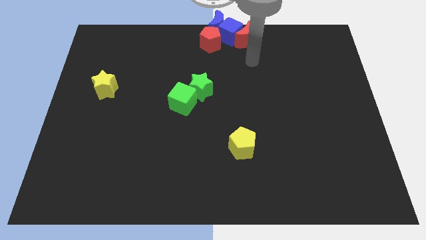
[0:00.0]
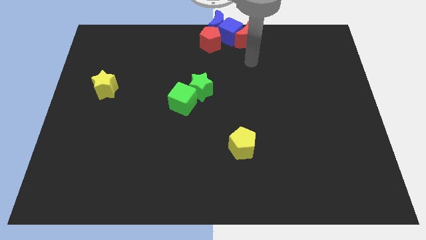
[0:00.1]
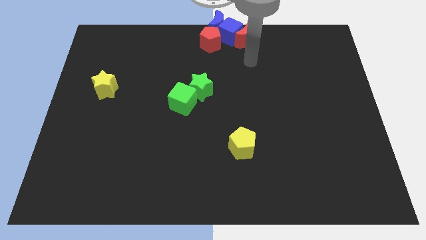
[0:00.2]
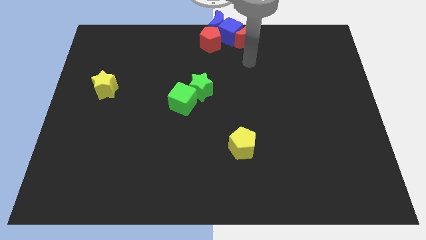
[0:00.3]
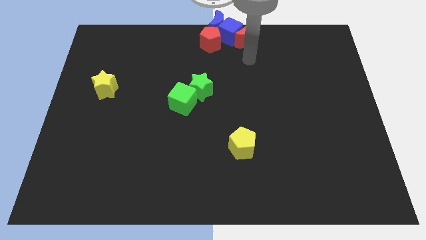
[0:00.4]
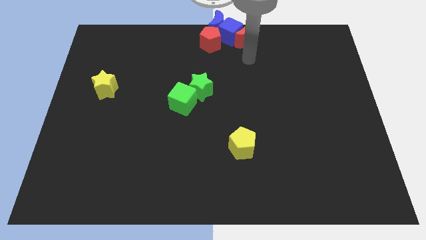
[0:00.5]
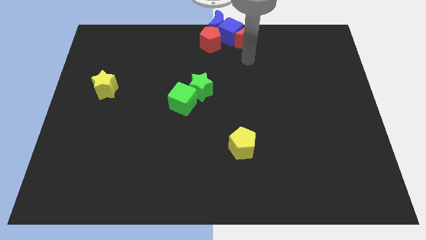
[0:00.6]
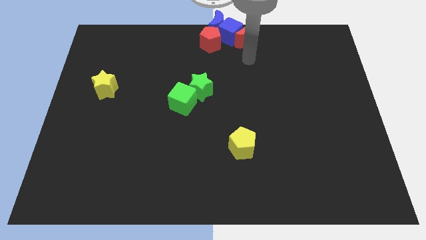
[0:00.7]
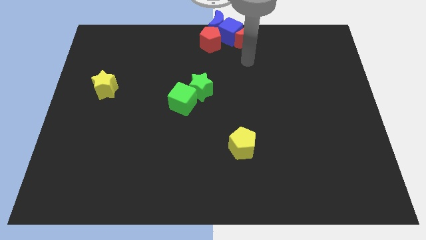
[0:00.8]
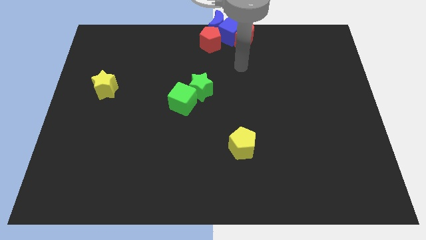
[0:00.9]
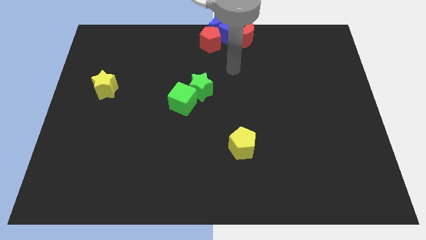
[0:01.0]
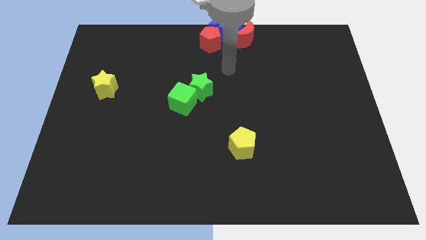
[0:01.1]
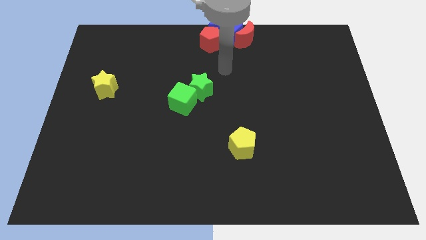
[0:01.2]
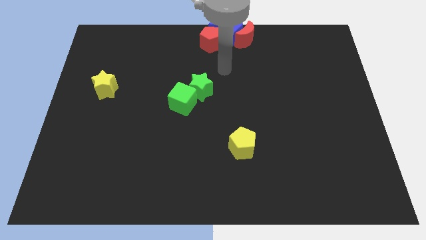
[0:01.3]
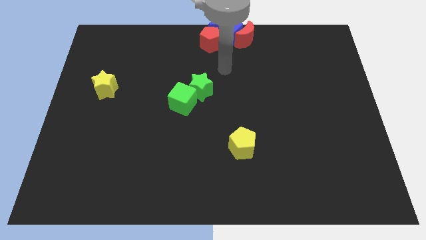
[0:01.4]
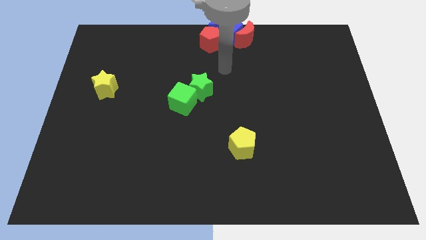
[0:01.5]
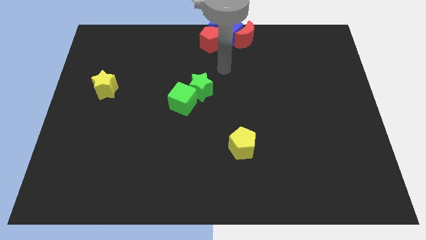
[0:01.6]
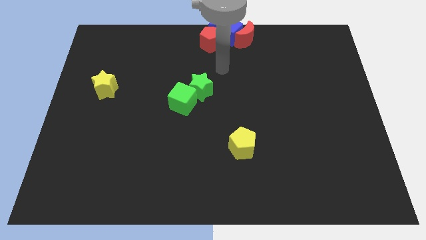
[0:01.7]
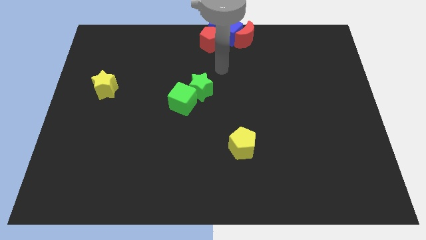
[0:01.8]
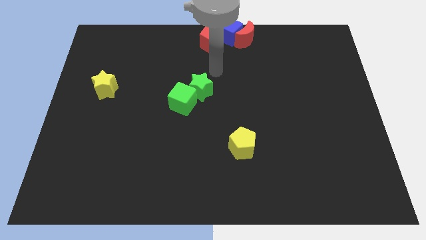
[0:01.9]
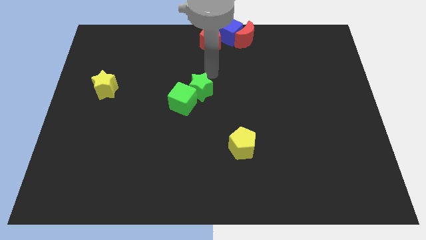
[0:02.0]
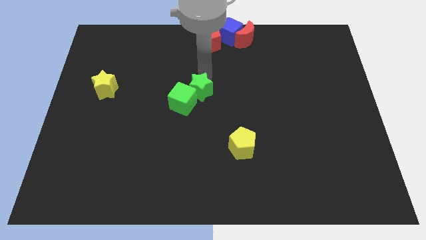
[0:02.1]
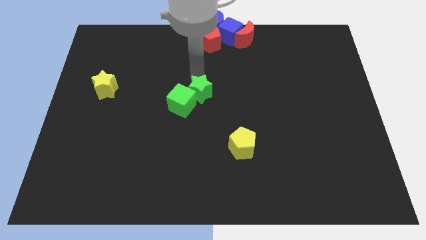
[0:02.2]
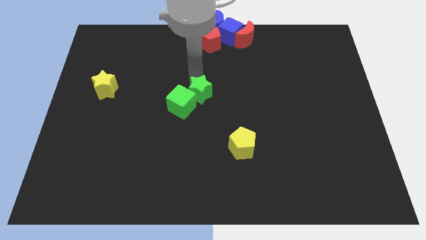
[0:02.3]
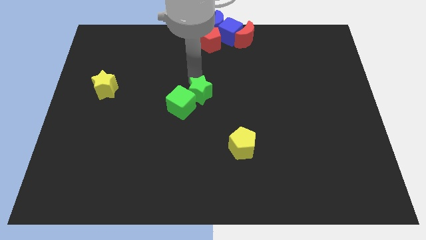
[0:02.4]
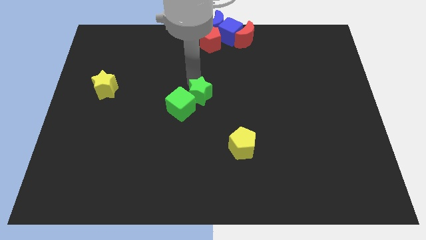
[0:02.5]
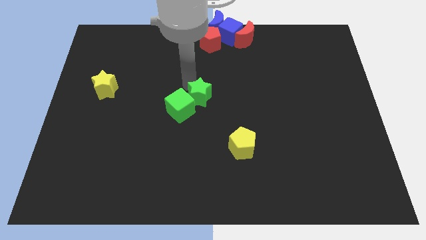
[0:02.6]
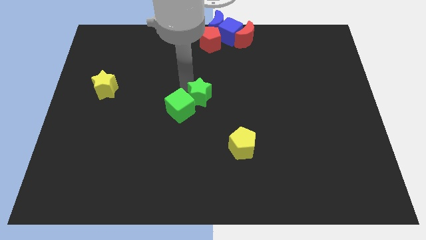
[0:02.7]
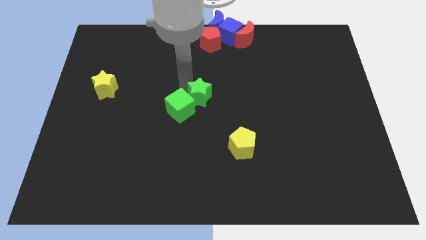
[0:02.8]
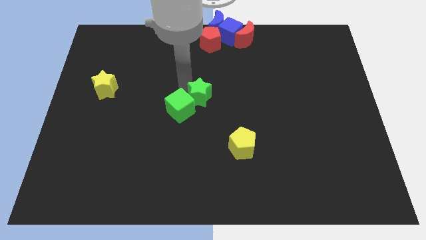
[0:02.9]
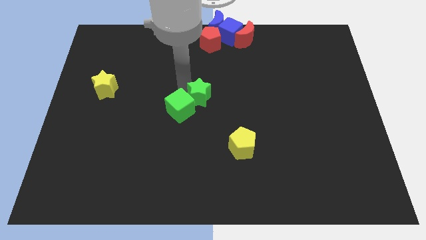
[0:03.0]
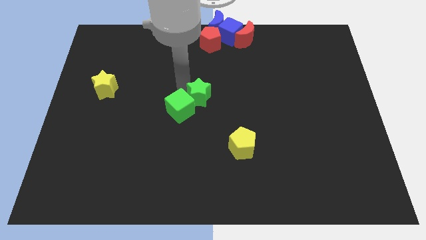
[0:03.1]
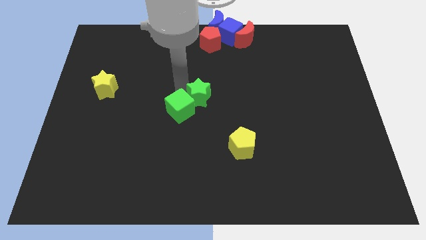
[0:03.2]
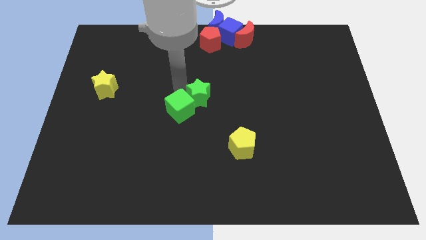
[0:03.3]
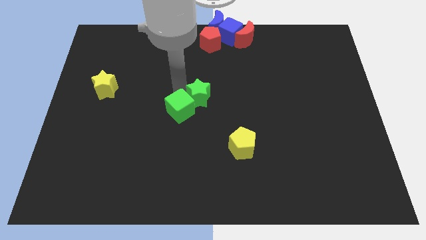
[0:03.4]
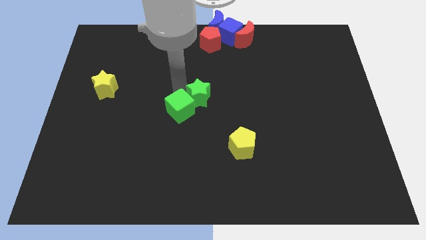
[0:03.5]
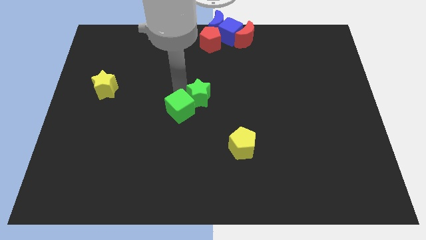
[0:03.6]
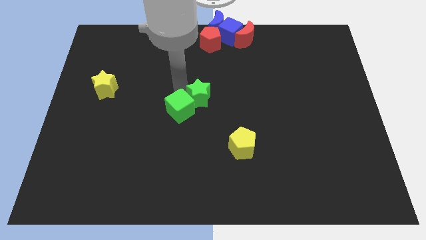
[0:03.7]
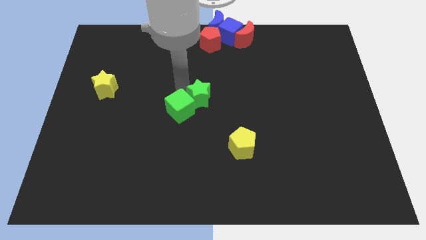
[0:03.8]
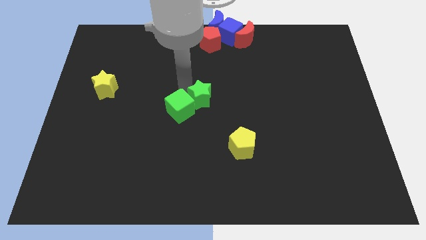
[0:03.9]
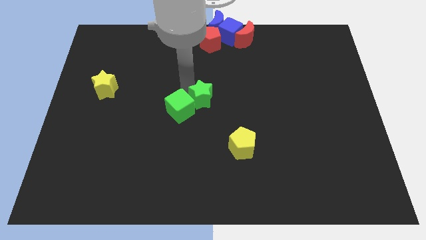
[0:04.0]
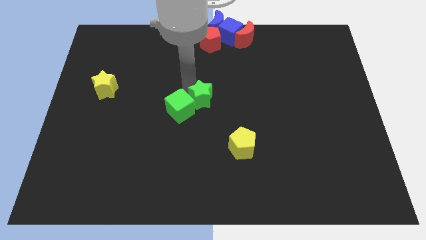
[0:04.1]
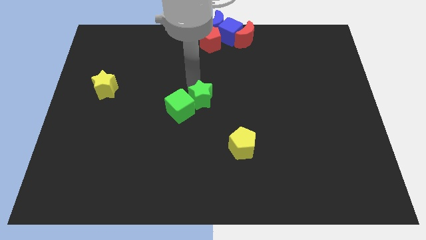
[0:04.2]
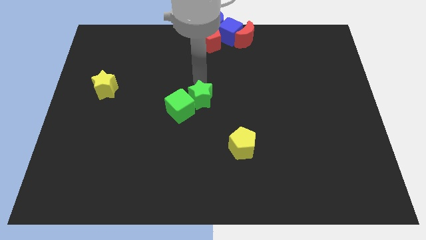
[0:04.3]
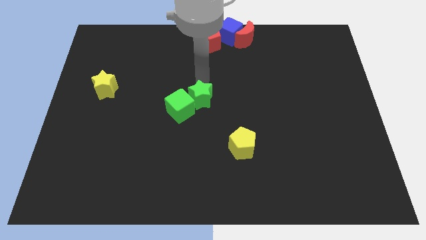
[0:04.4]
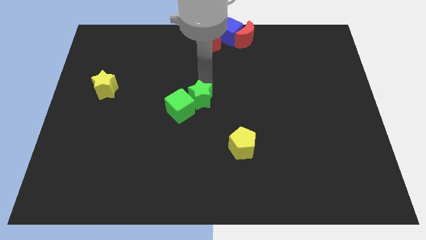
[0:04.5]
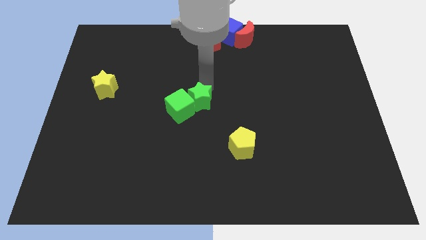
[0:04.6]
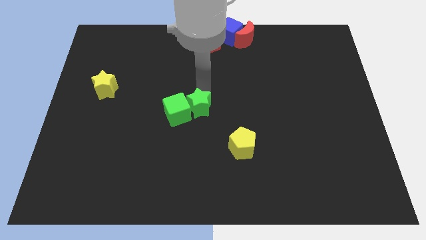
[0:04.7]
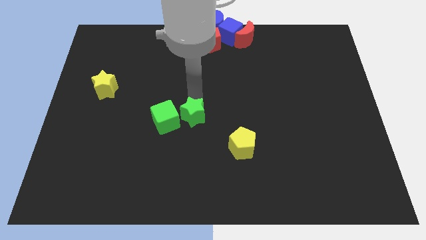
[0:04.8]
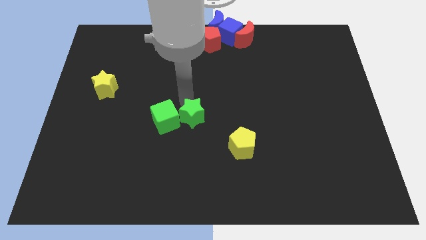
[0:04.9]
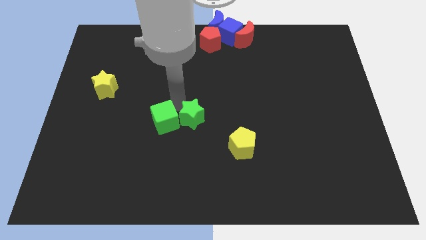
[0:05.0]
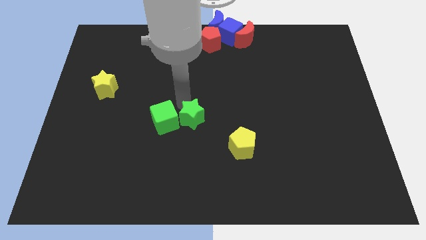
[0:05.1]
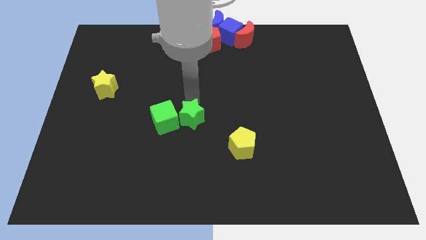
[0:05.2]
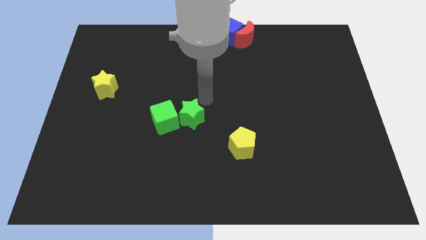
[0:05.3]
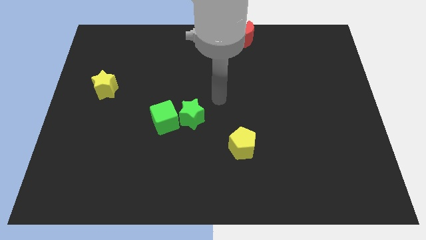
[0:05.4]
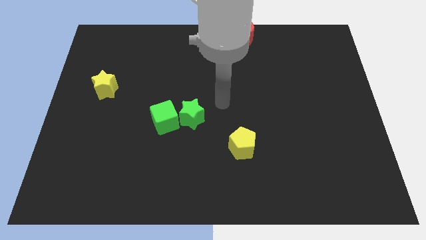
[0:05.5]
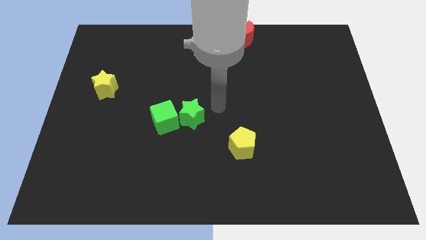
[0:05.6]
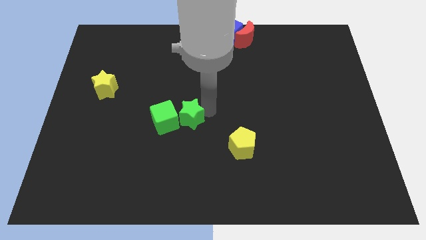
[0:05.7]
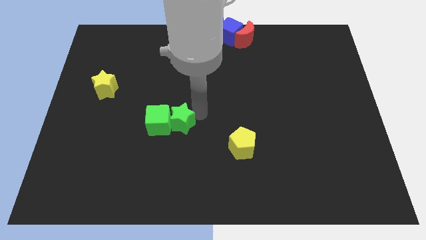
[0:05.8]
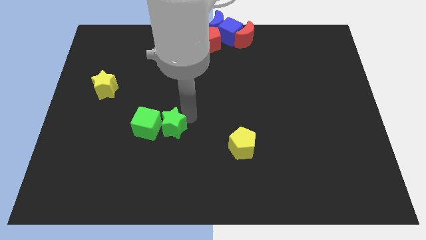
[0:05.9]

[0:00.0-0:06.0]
push the green cube with the green star

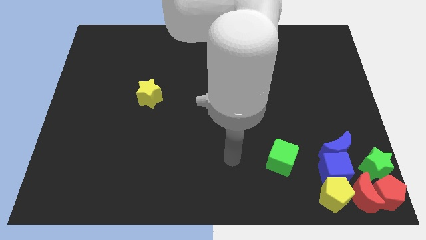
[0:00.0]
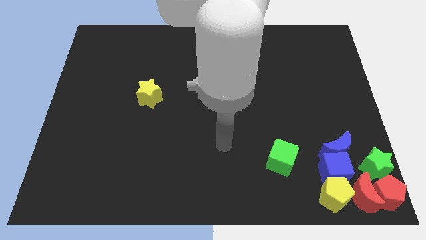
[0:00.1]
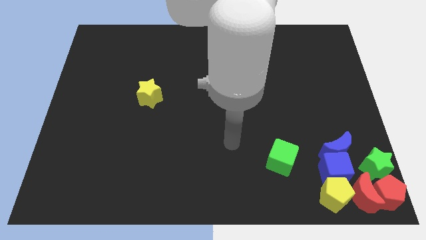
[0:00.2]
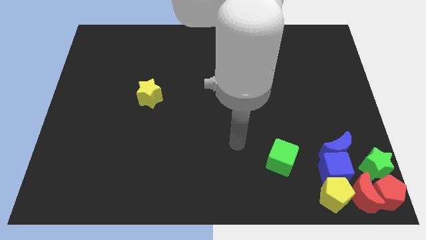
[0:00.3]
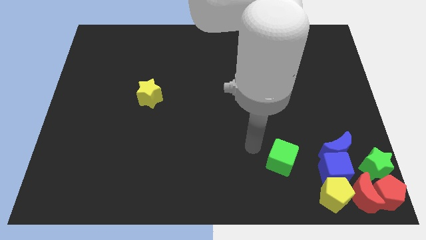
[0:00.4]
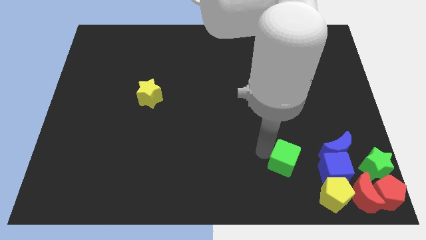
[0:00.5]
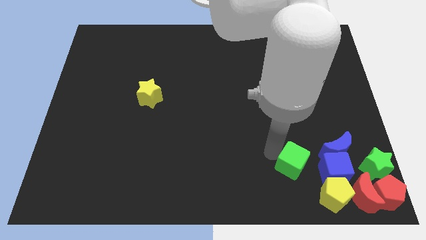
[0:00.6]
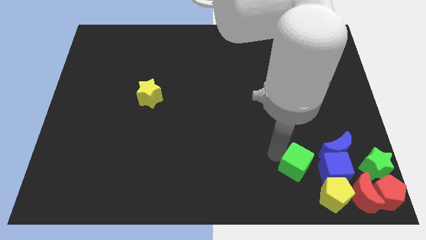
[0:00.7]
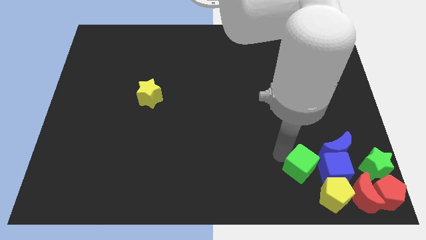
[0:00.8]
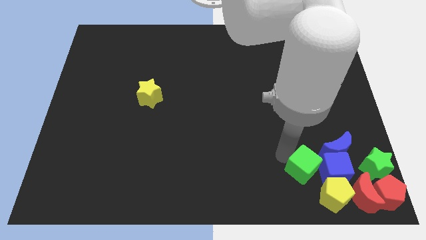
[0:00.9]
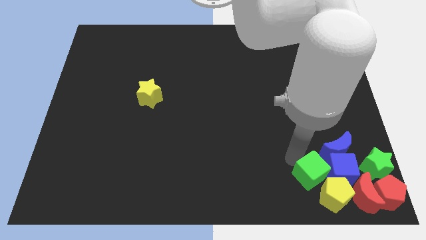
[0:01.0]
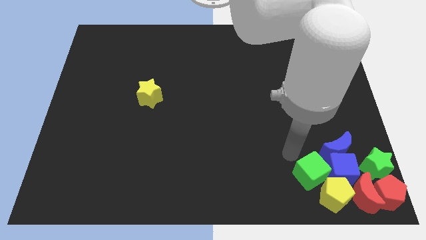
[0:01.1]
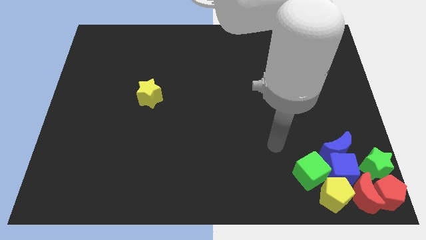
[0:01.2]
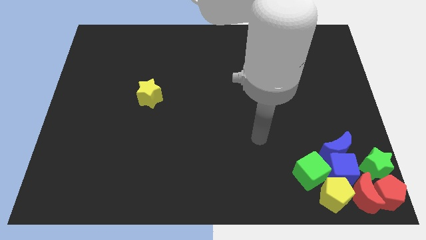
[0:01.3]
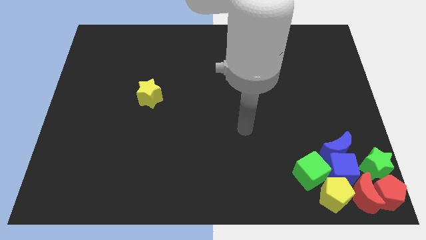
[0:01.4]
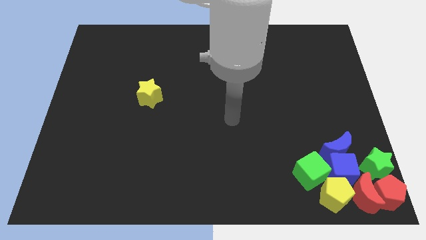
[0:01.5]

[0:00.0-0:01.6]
place green cube to the left of blue cube

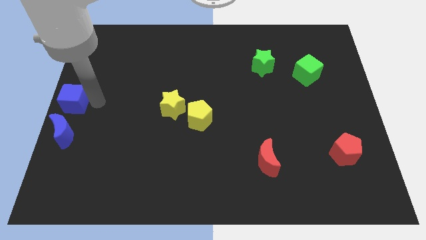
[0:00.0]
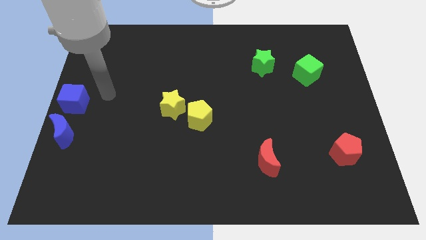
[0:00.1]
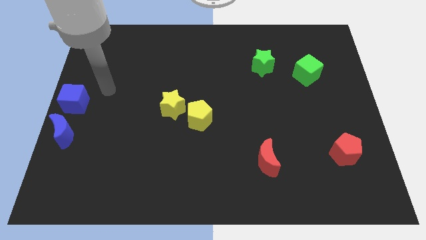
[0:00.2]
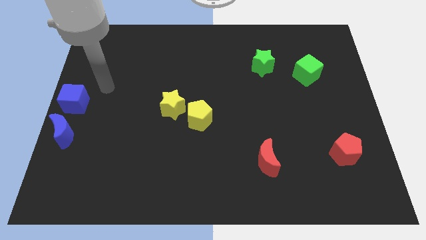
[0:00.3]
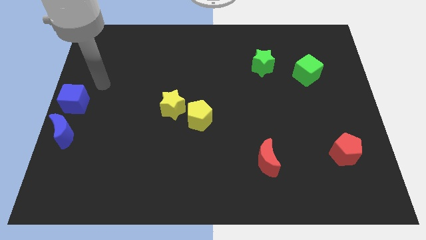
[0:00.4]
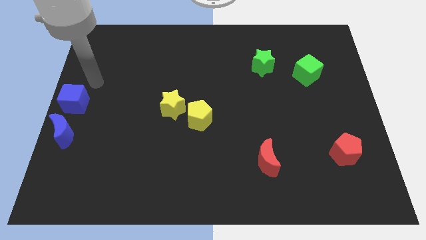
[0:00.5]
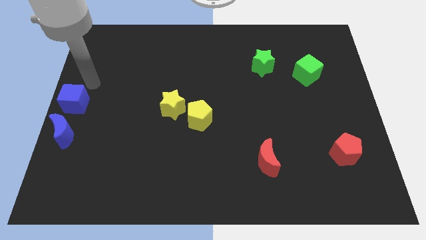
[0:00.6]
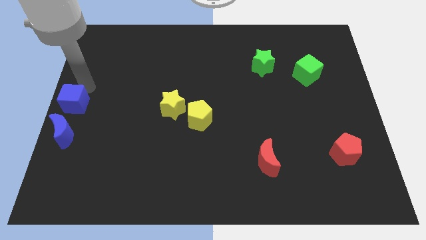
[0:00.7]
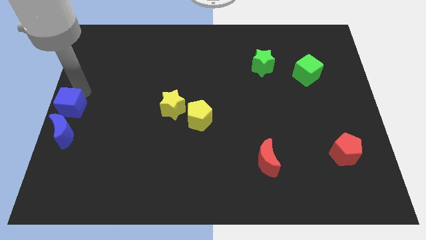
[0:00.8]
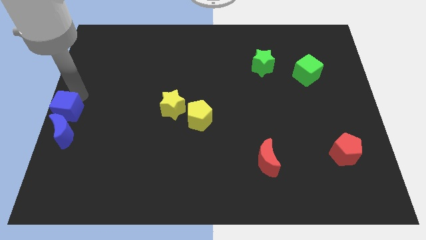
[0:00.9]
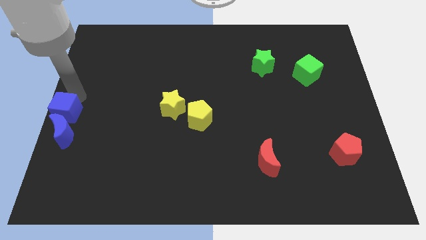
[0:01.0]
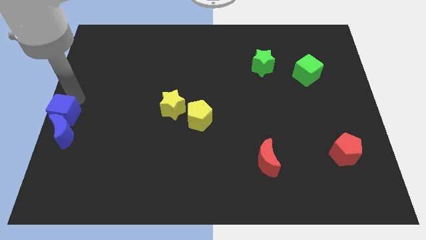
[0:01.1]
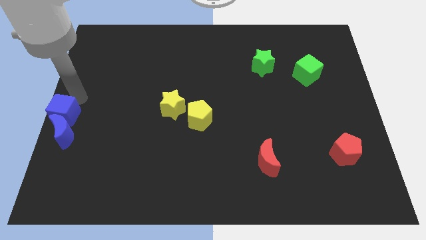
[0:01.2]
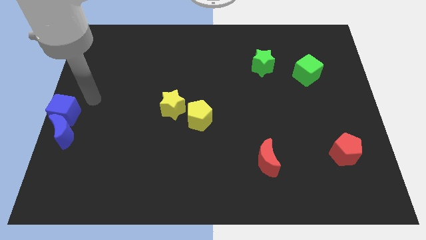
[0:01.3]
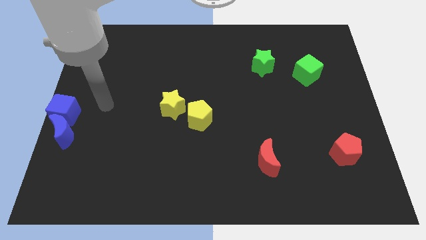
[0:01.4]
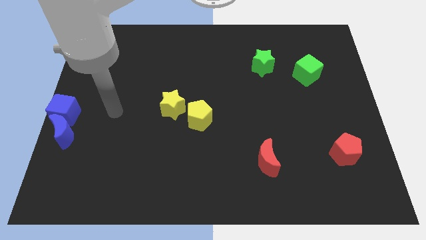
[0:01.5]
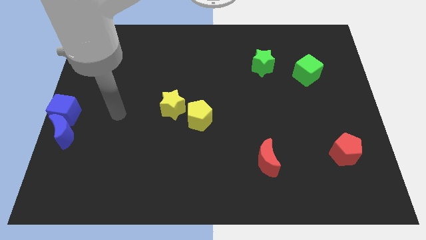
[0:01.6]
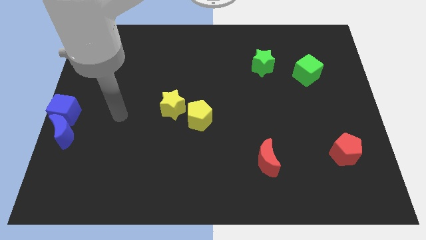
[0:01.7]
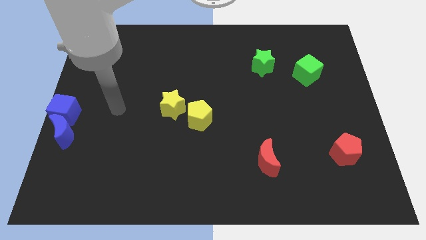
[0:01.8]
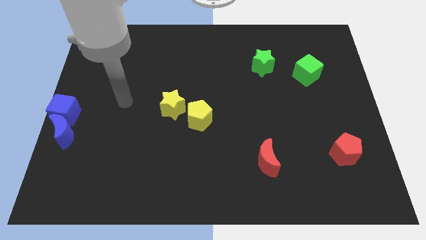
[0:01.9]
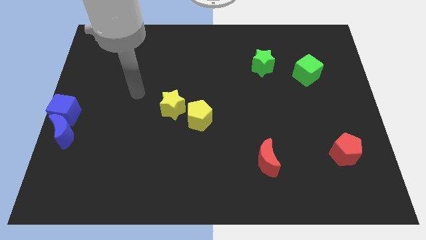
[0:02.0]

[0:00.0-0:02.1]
move blue cube into blue moon
